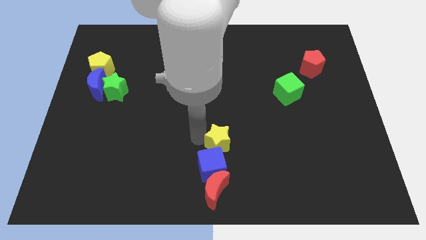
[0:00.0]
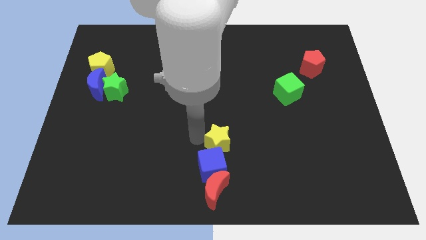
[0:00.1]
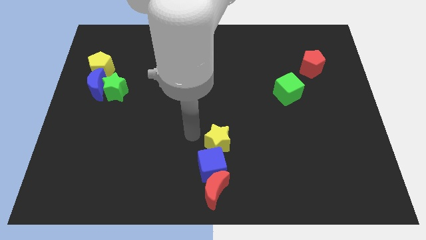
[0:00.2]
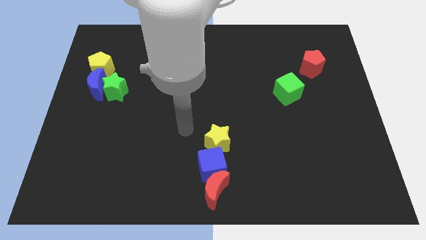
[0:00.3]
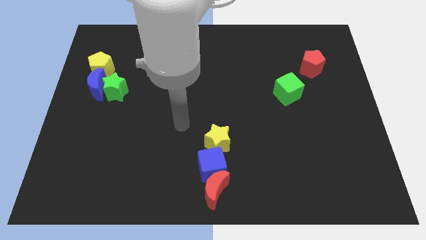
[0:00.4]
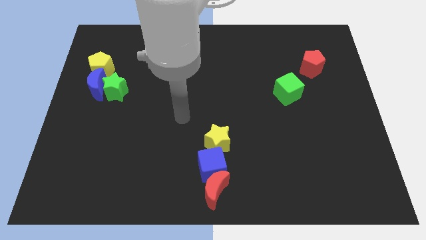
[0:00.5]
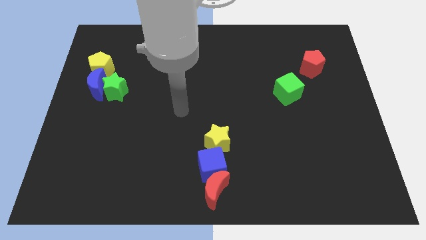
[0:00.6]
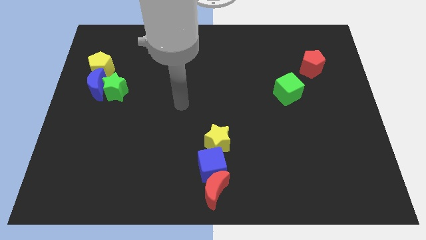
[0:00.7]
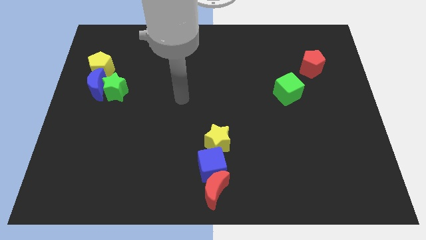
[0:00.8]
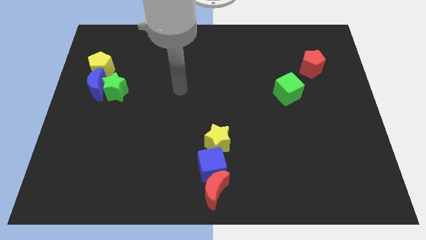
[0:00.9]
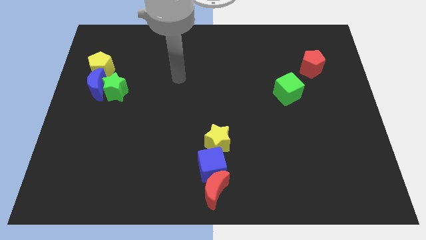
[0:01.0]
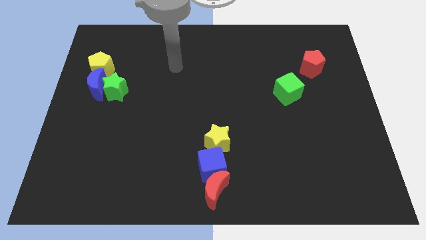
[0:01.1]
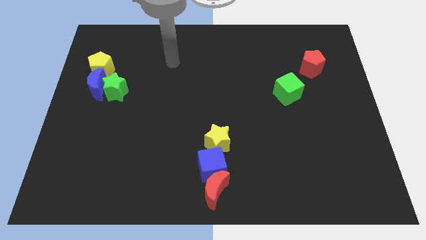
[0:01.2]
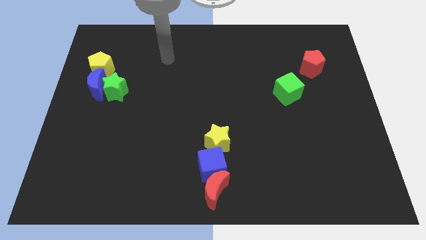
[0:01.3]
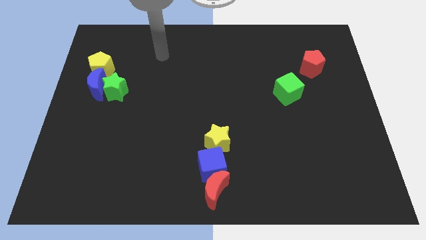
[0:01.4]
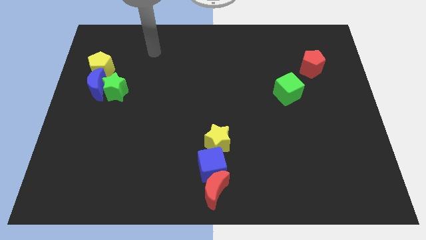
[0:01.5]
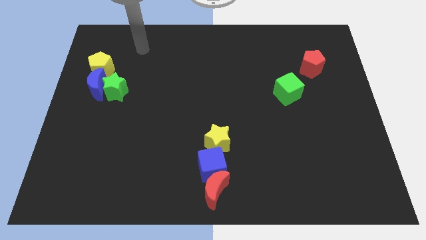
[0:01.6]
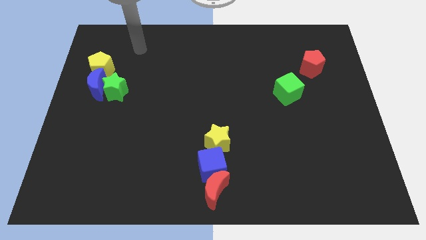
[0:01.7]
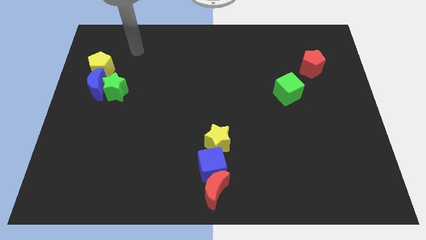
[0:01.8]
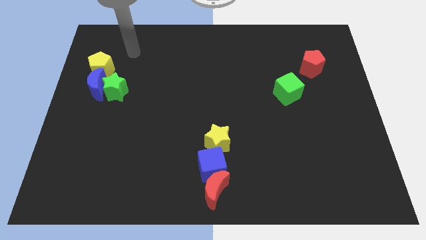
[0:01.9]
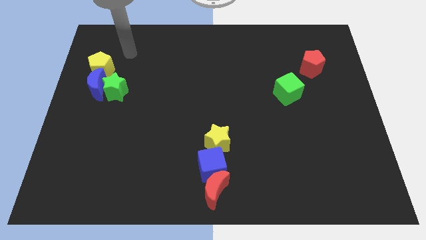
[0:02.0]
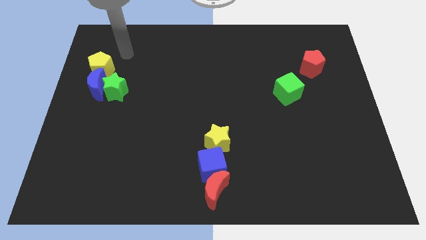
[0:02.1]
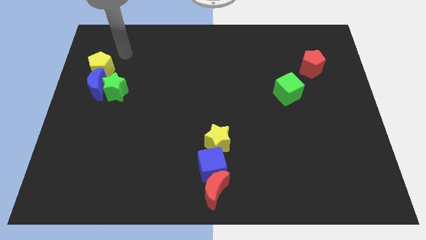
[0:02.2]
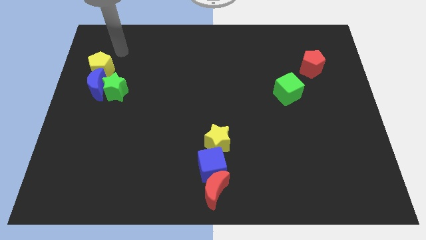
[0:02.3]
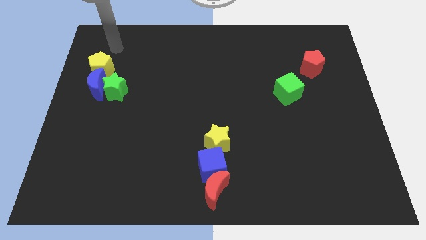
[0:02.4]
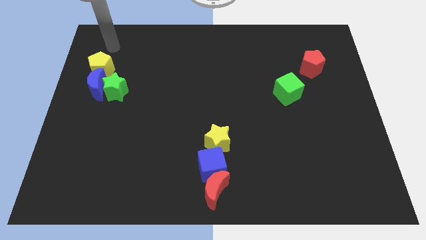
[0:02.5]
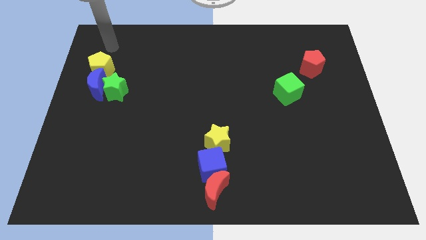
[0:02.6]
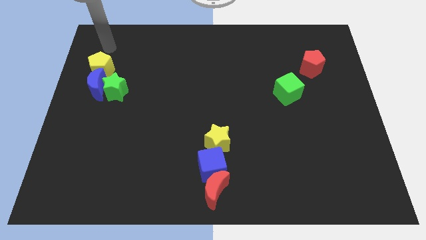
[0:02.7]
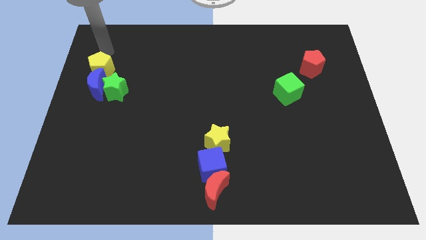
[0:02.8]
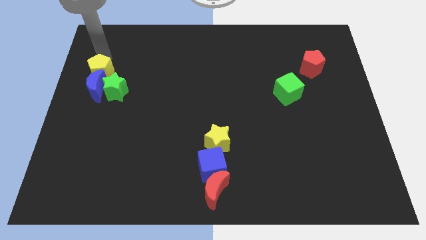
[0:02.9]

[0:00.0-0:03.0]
point your arm at the top of the yellow pentagon

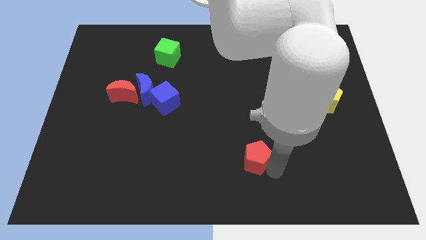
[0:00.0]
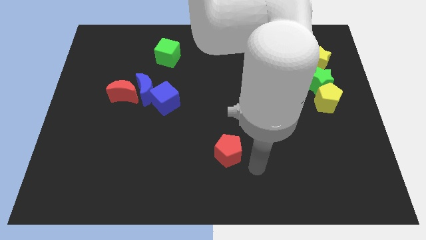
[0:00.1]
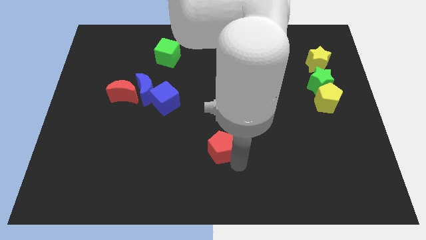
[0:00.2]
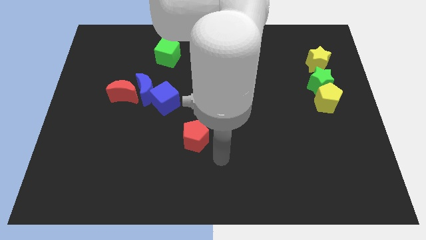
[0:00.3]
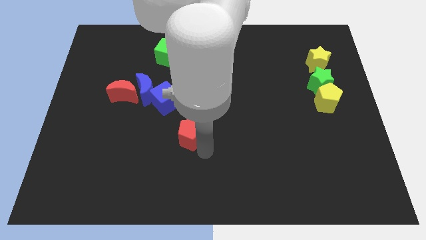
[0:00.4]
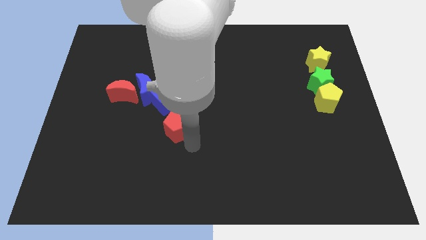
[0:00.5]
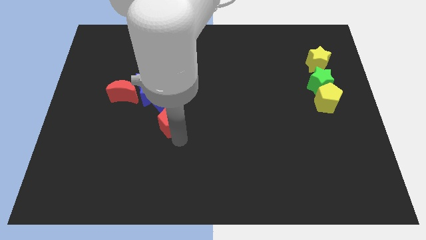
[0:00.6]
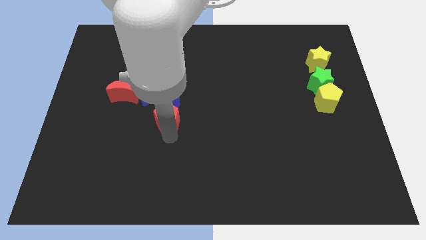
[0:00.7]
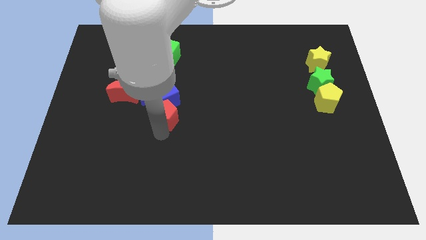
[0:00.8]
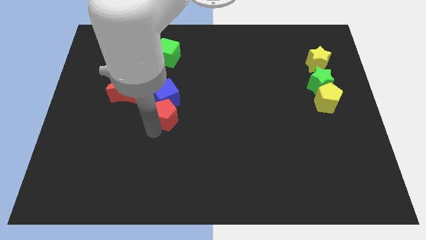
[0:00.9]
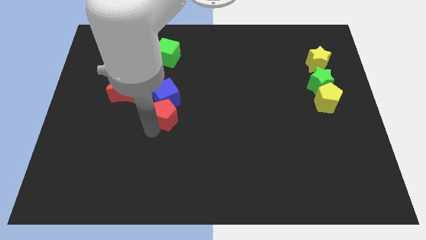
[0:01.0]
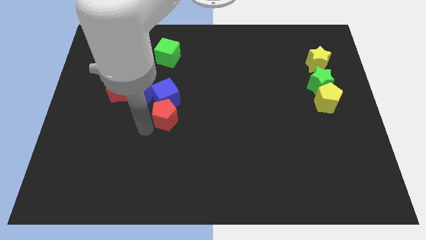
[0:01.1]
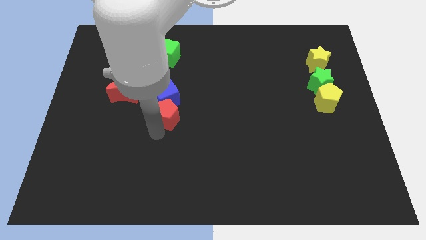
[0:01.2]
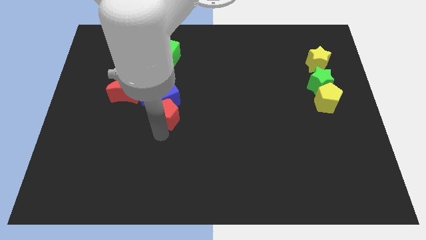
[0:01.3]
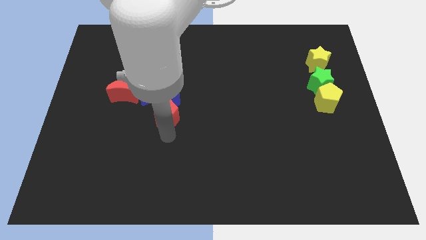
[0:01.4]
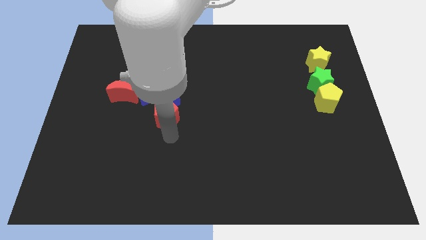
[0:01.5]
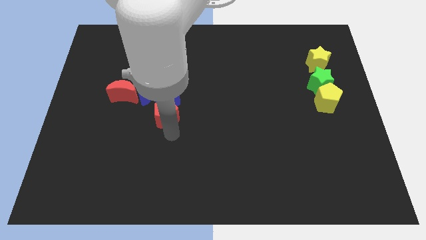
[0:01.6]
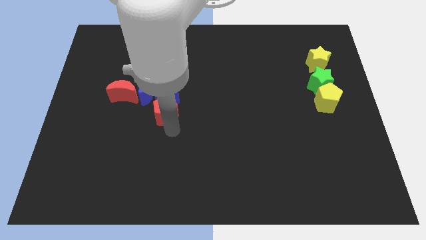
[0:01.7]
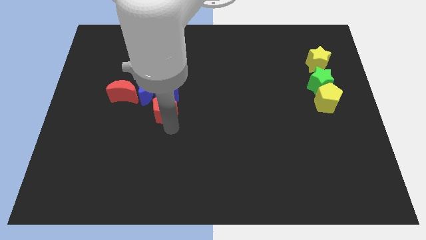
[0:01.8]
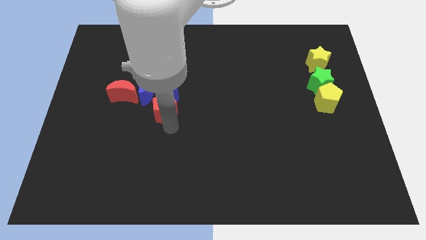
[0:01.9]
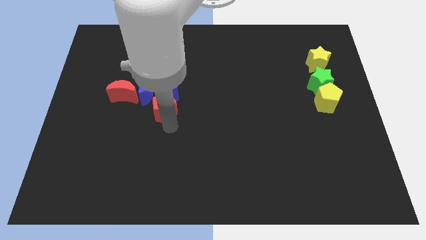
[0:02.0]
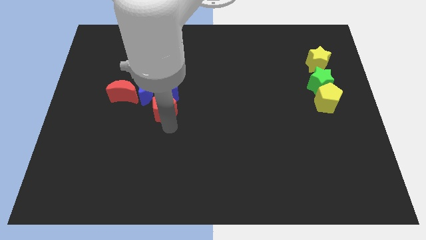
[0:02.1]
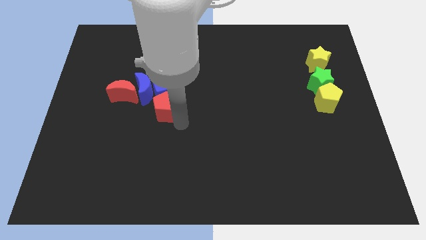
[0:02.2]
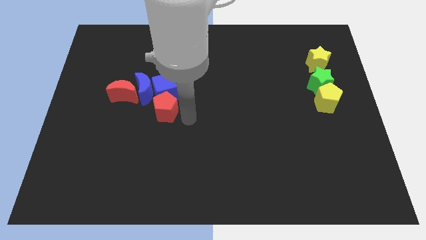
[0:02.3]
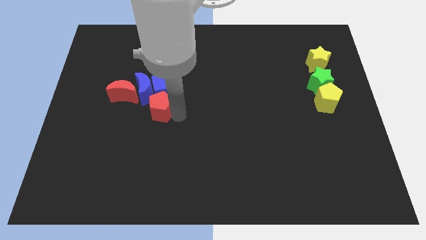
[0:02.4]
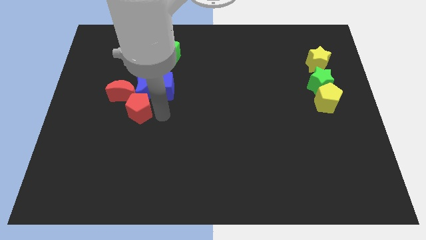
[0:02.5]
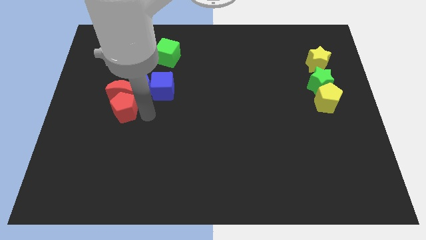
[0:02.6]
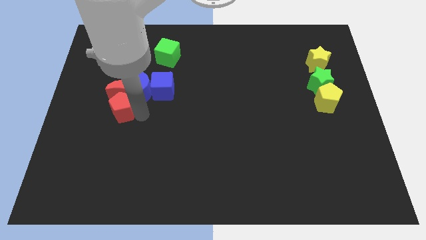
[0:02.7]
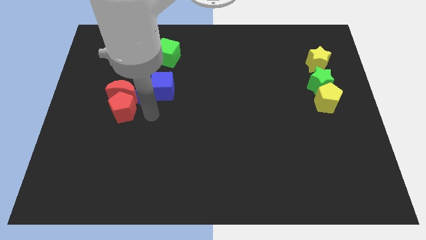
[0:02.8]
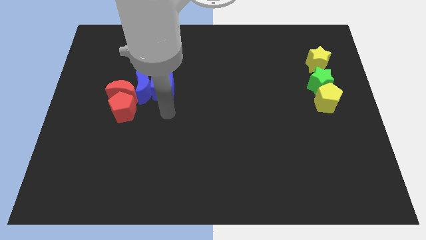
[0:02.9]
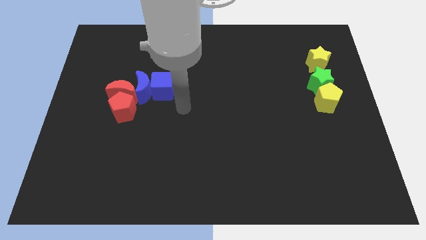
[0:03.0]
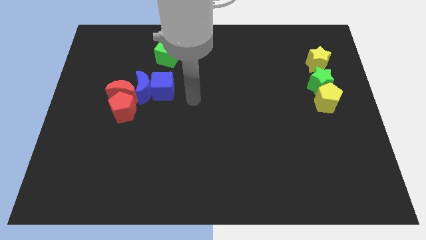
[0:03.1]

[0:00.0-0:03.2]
put the red pentagon at the bottom side of the red moon

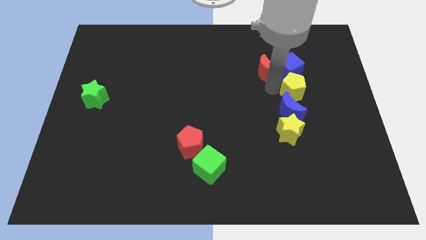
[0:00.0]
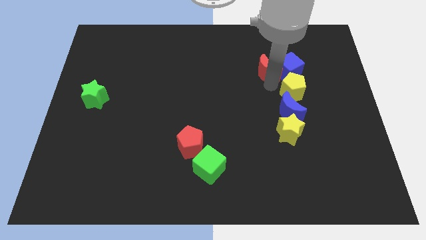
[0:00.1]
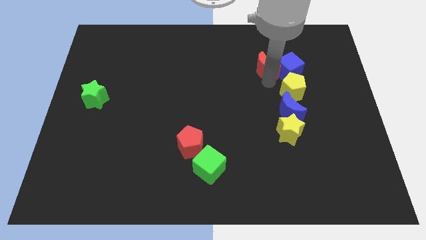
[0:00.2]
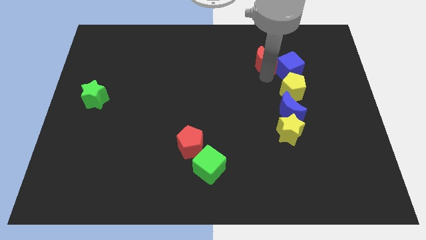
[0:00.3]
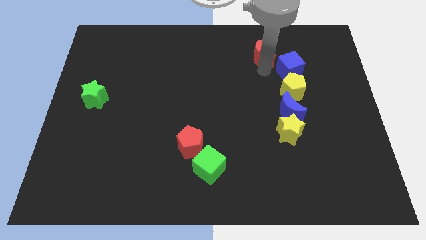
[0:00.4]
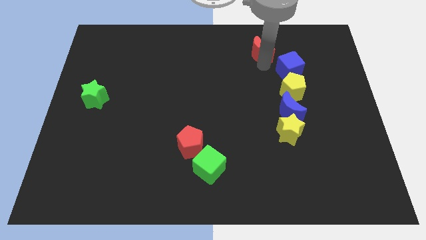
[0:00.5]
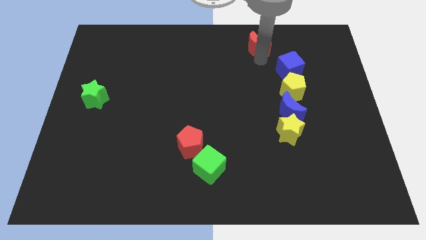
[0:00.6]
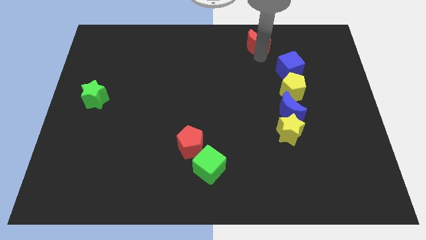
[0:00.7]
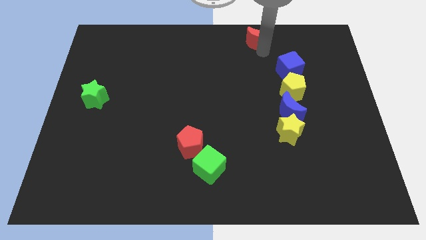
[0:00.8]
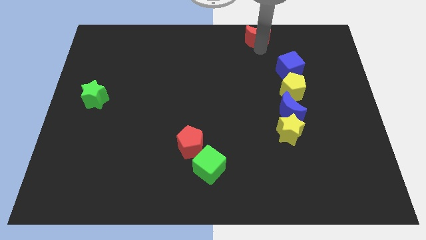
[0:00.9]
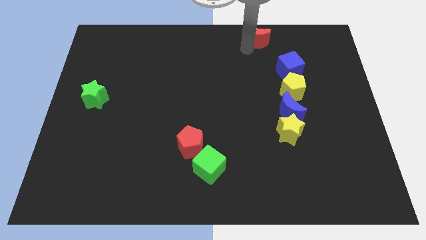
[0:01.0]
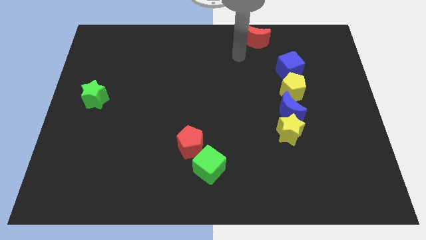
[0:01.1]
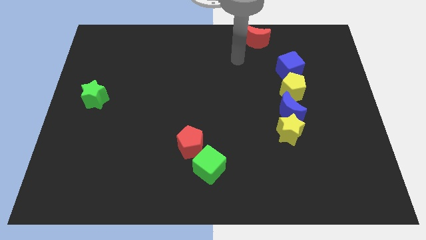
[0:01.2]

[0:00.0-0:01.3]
place red moon to the top center of the board

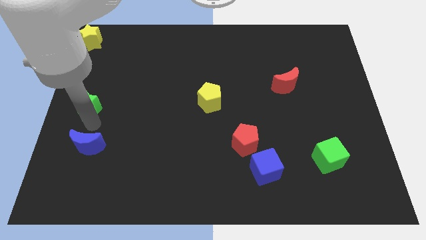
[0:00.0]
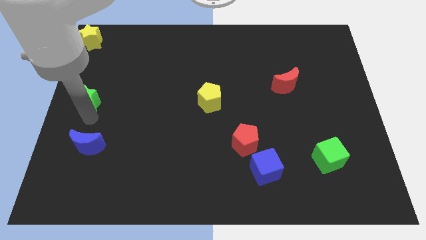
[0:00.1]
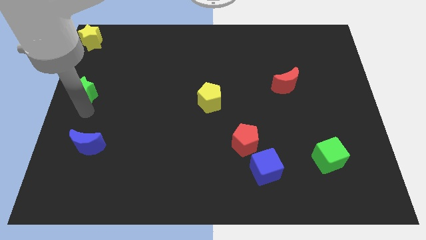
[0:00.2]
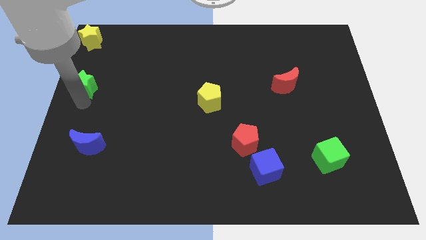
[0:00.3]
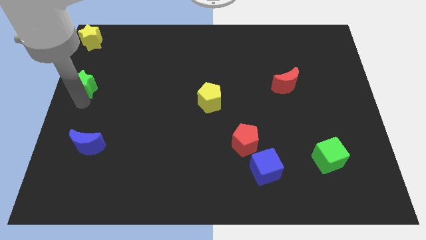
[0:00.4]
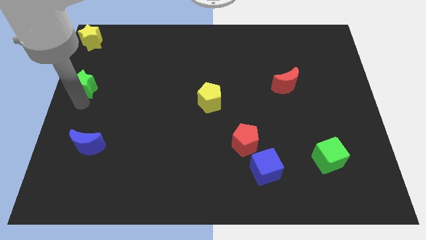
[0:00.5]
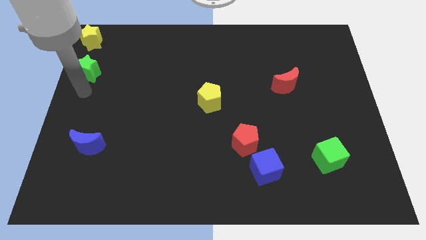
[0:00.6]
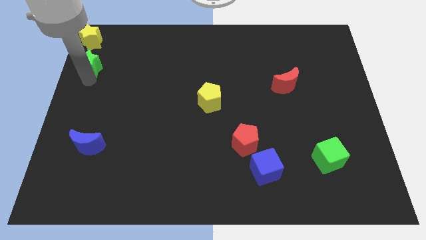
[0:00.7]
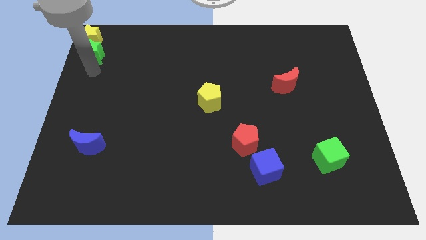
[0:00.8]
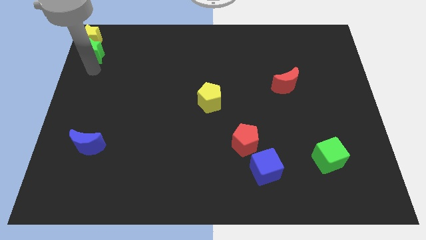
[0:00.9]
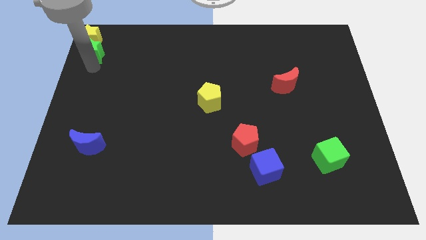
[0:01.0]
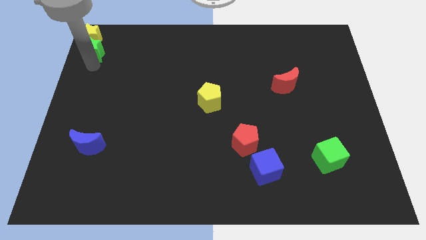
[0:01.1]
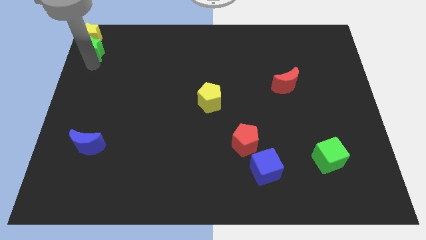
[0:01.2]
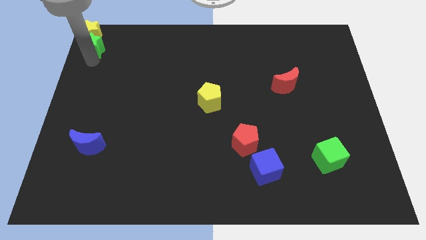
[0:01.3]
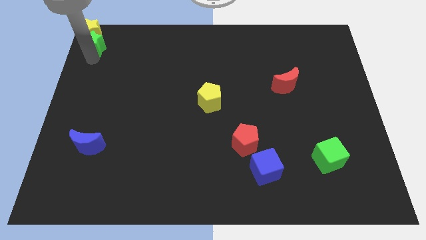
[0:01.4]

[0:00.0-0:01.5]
drag the green star into the bottom side of the yellow star
